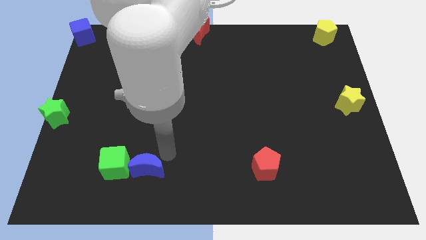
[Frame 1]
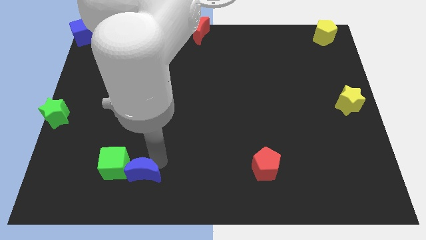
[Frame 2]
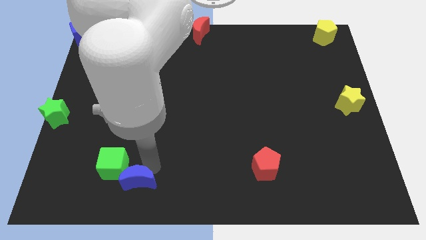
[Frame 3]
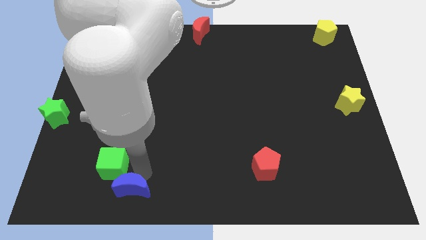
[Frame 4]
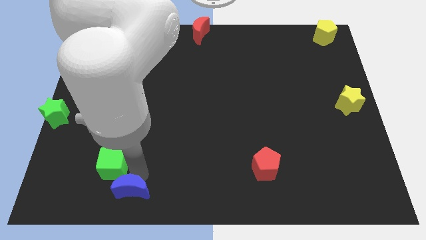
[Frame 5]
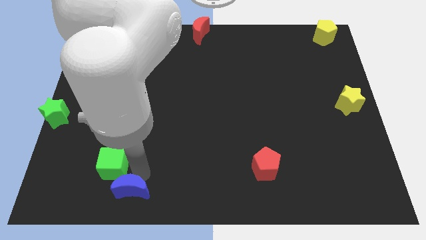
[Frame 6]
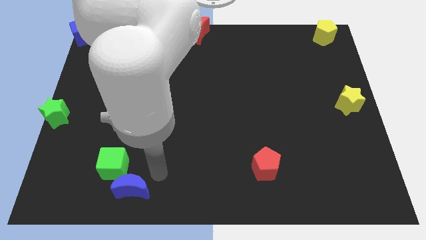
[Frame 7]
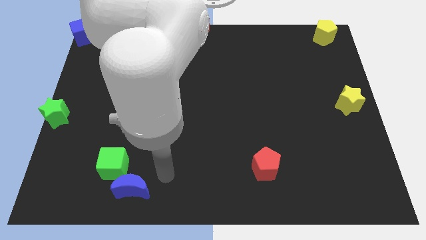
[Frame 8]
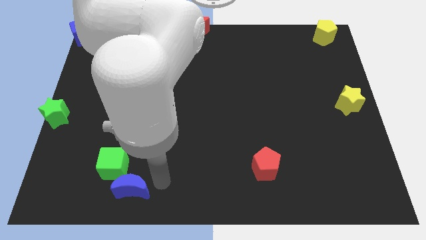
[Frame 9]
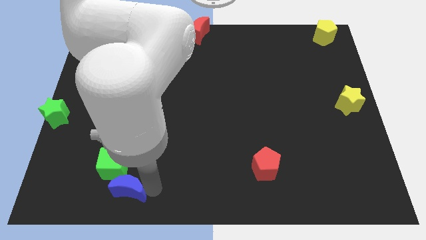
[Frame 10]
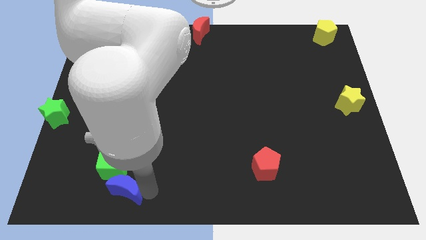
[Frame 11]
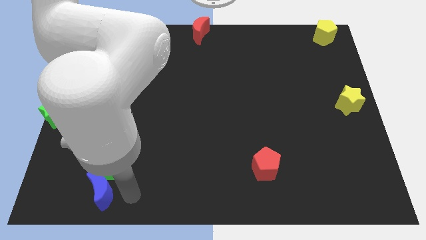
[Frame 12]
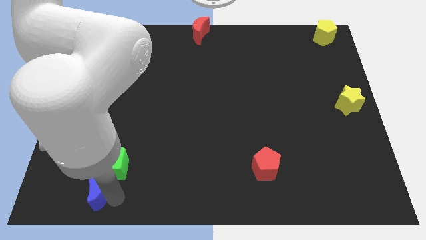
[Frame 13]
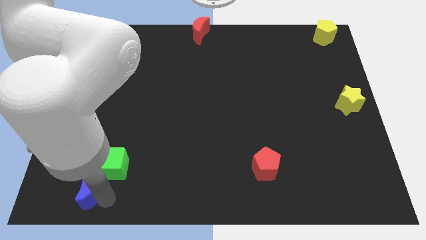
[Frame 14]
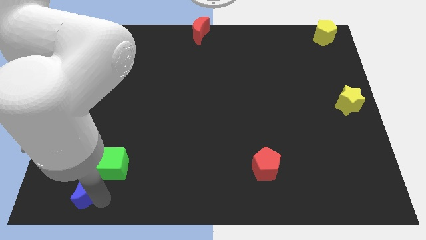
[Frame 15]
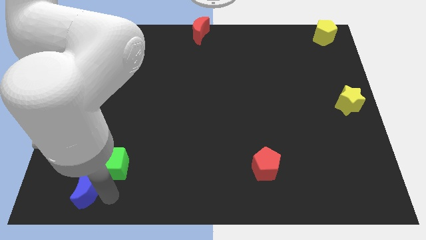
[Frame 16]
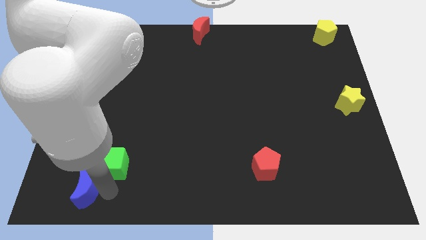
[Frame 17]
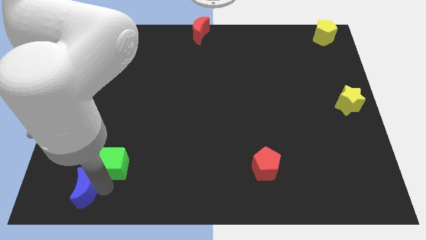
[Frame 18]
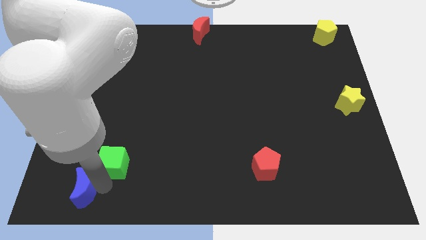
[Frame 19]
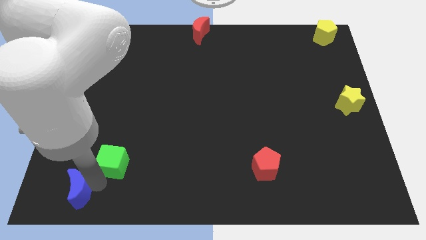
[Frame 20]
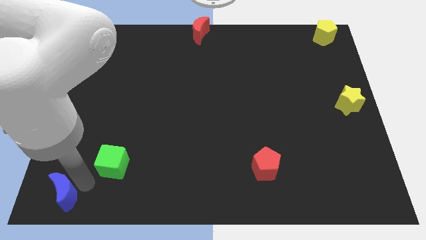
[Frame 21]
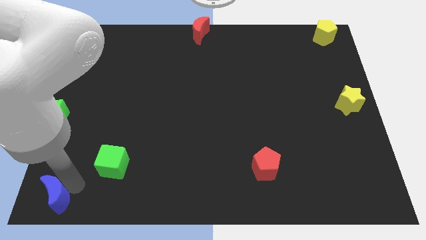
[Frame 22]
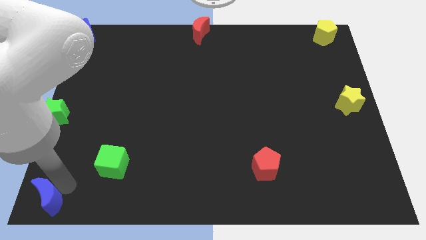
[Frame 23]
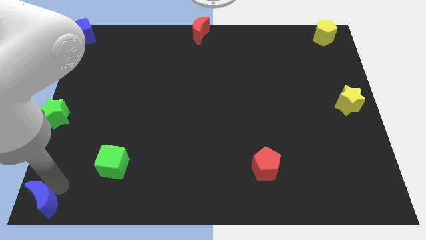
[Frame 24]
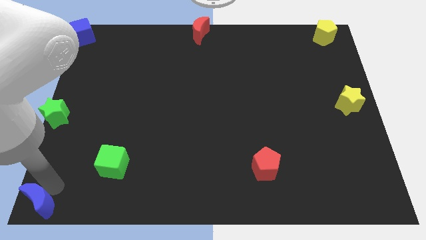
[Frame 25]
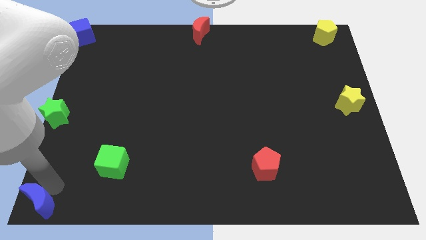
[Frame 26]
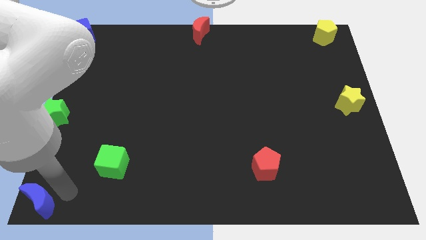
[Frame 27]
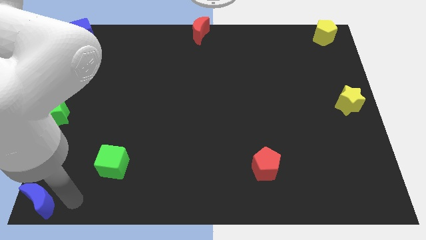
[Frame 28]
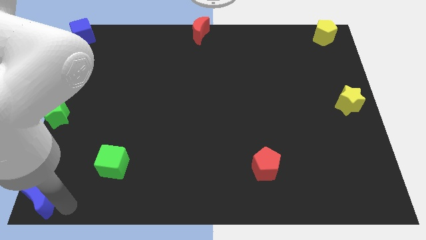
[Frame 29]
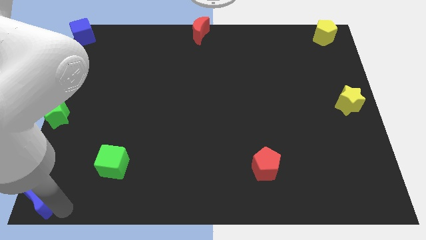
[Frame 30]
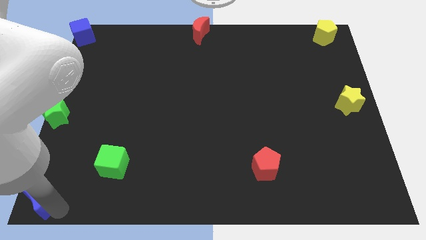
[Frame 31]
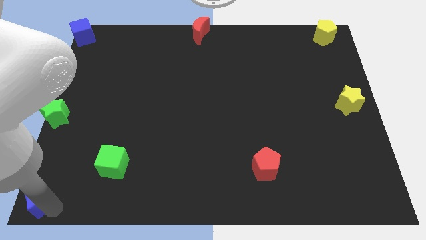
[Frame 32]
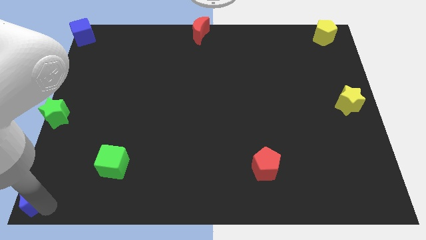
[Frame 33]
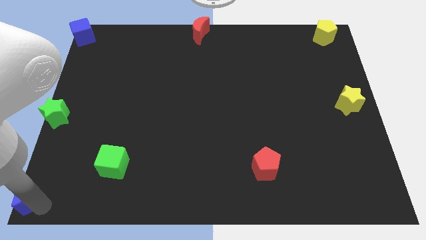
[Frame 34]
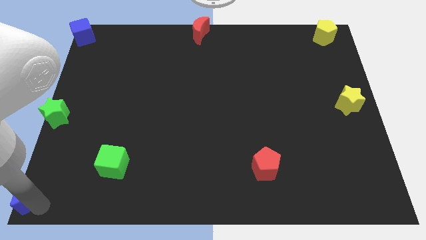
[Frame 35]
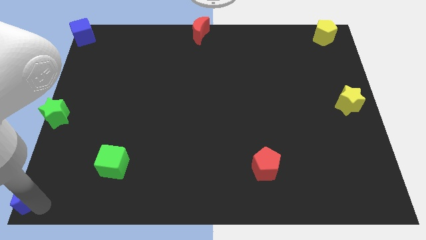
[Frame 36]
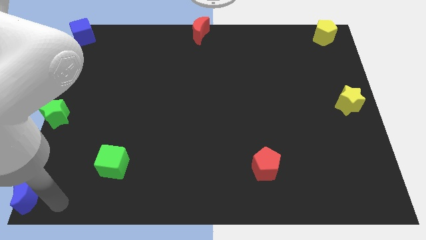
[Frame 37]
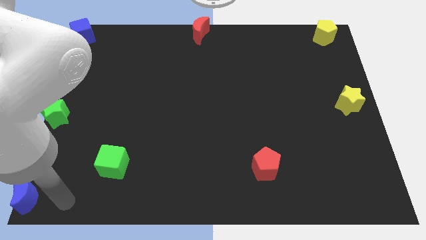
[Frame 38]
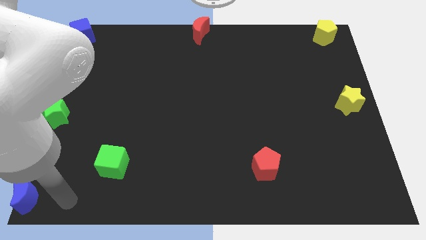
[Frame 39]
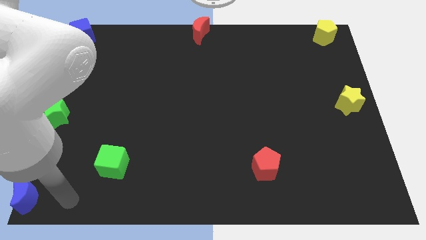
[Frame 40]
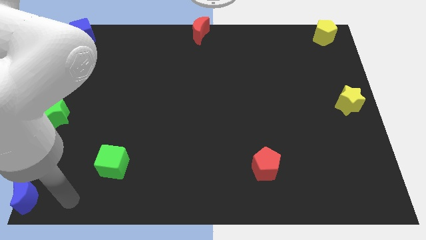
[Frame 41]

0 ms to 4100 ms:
move the blue moon to the bottom left of the board

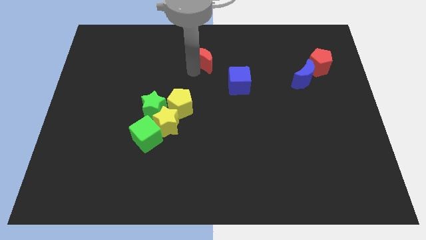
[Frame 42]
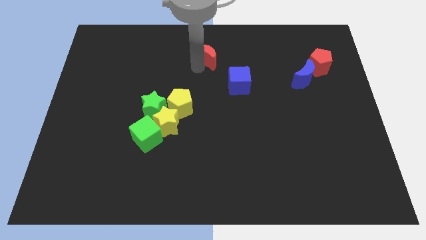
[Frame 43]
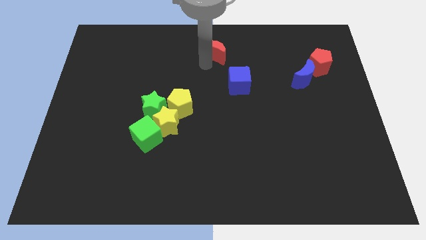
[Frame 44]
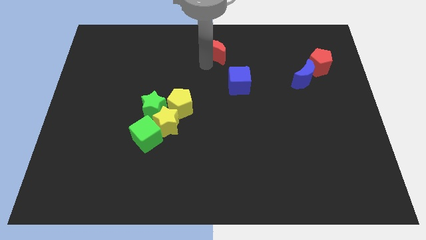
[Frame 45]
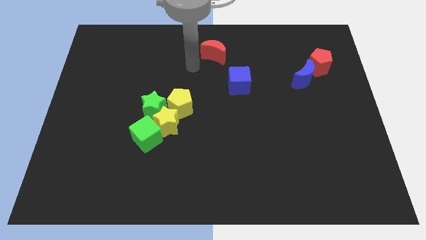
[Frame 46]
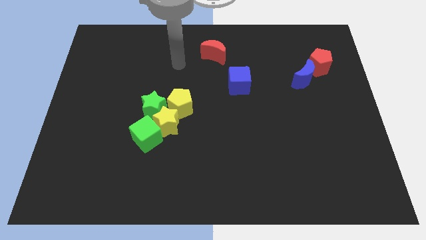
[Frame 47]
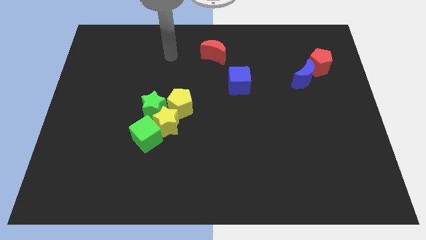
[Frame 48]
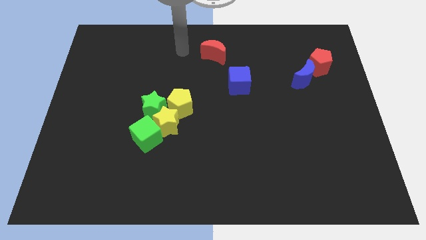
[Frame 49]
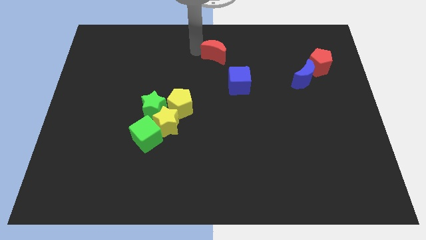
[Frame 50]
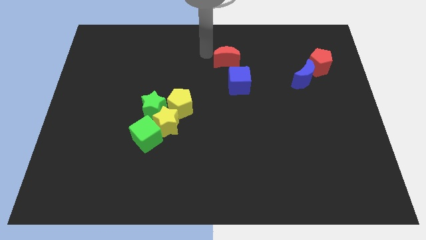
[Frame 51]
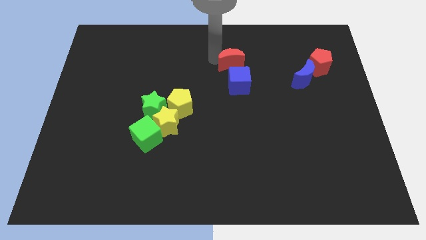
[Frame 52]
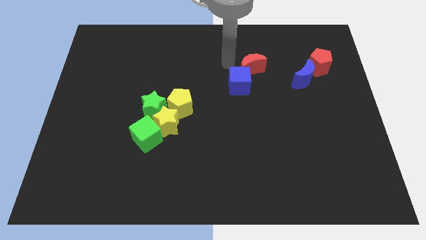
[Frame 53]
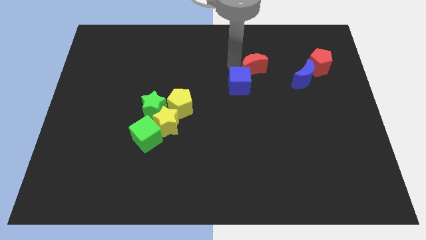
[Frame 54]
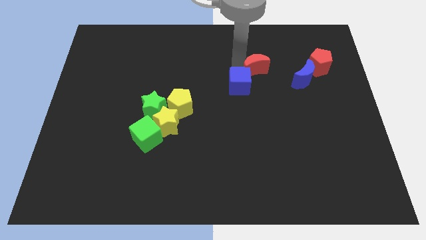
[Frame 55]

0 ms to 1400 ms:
move the red crescent into blue cube

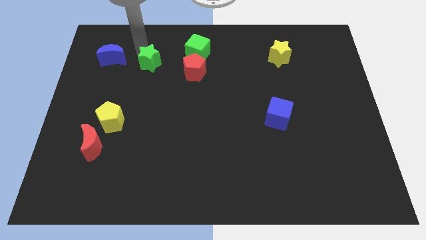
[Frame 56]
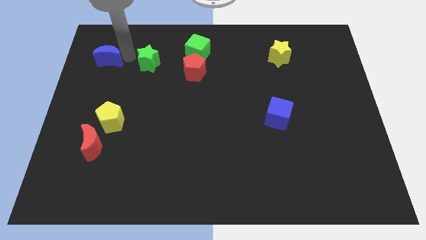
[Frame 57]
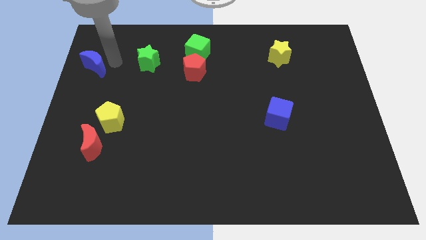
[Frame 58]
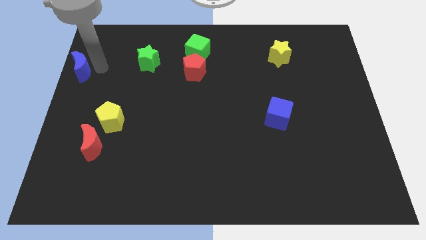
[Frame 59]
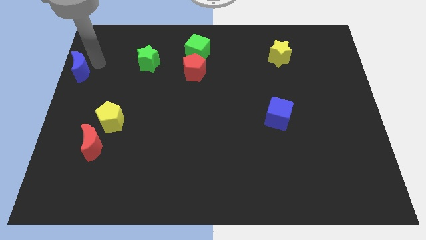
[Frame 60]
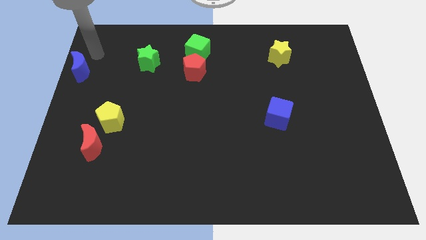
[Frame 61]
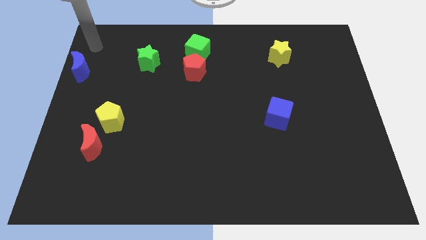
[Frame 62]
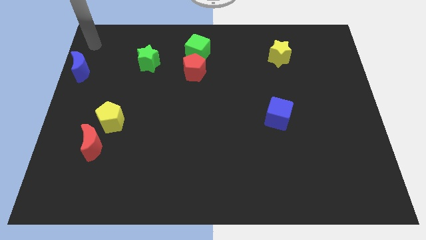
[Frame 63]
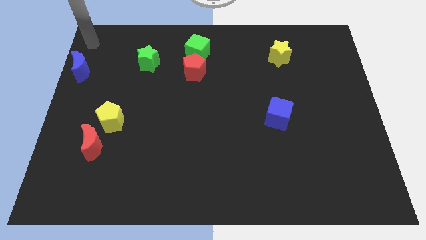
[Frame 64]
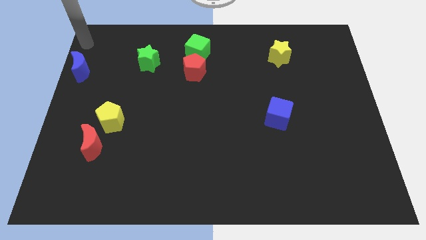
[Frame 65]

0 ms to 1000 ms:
push blue moon towards the left of the board

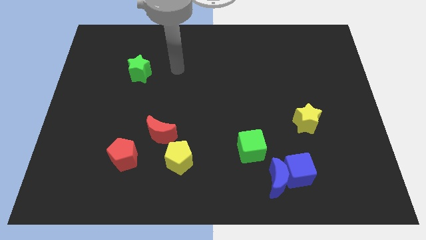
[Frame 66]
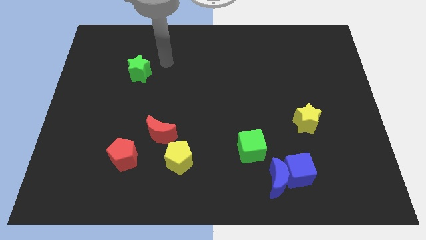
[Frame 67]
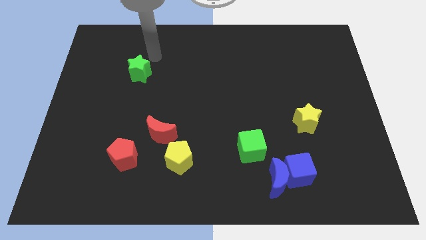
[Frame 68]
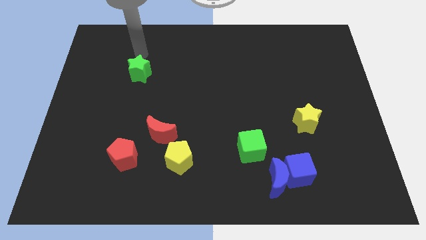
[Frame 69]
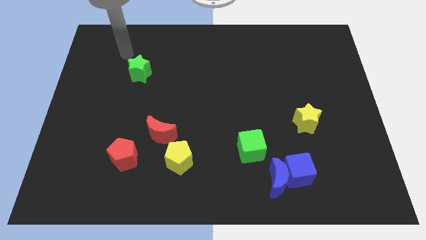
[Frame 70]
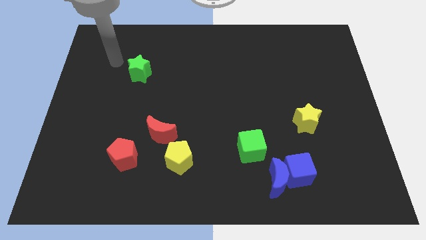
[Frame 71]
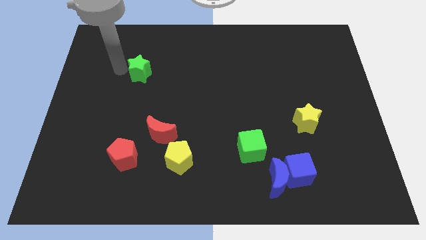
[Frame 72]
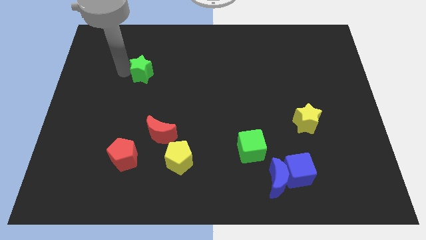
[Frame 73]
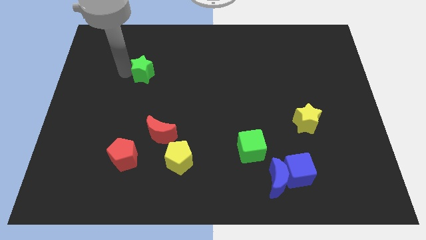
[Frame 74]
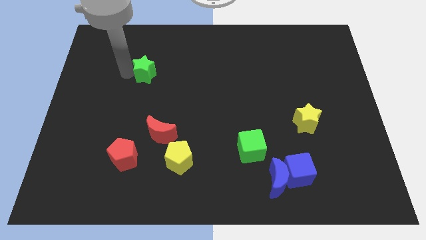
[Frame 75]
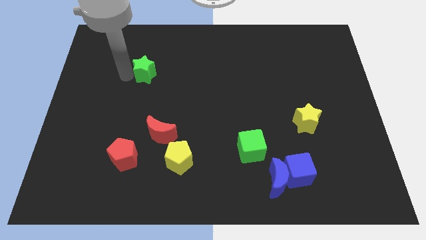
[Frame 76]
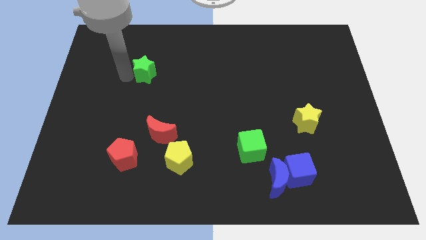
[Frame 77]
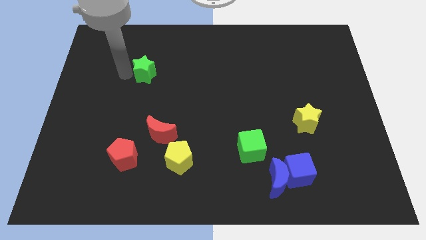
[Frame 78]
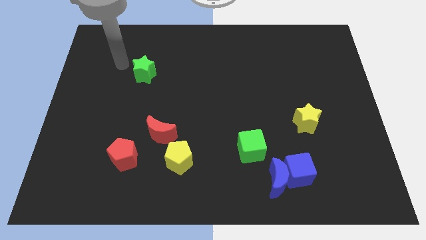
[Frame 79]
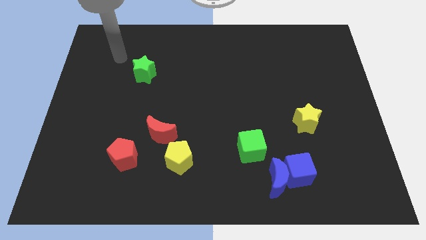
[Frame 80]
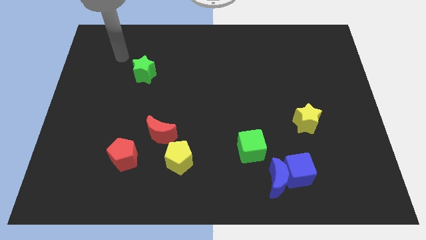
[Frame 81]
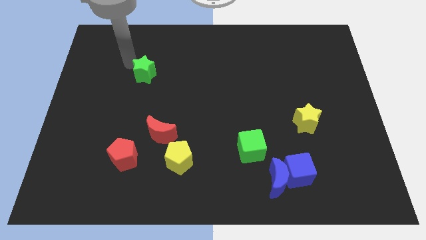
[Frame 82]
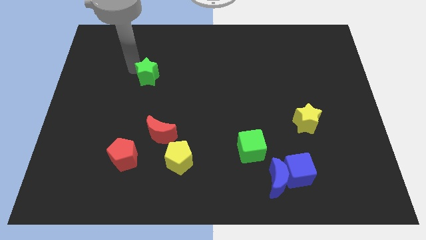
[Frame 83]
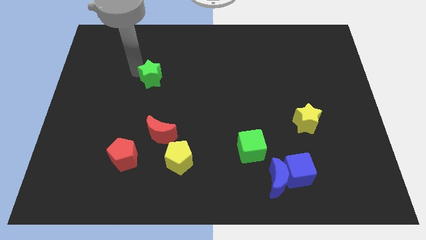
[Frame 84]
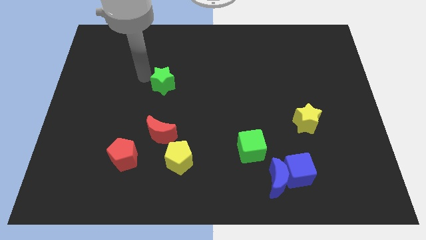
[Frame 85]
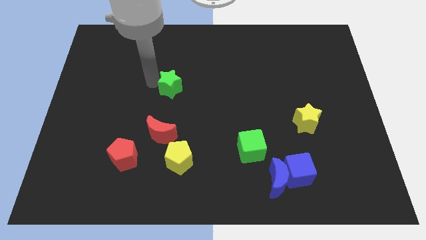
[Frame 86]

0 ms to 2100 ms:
push the green star to the top of the red crescent

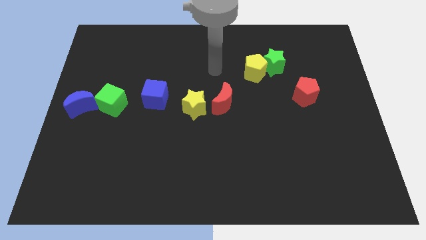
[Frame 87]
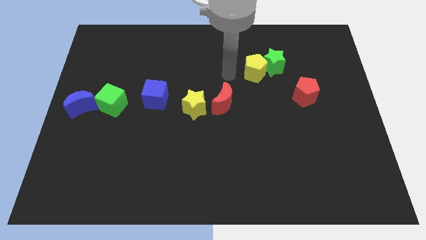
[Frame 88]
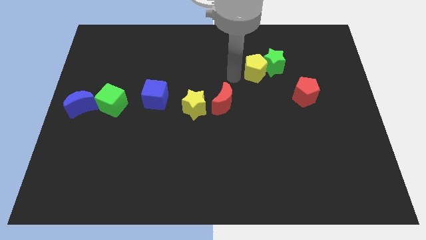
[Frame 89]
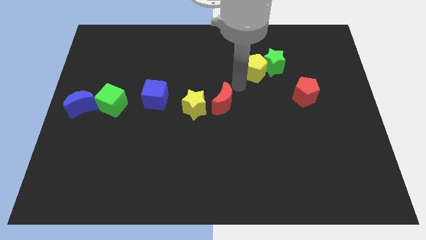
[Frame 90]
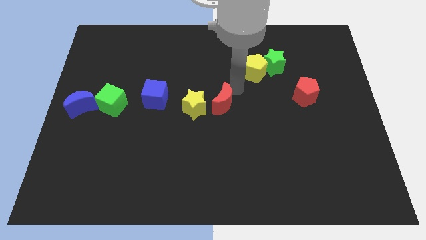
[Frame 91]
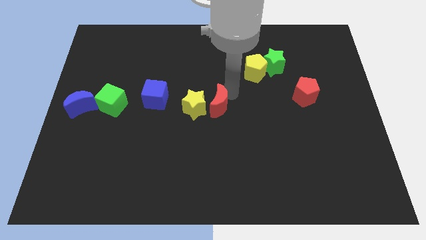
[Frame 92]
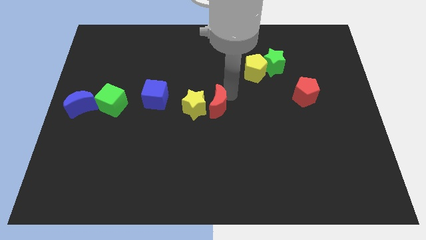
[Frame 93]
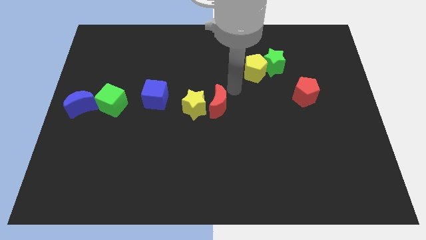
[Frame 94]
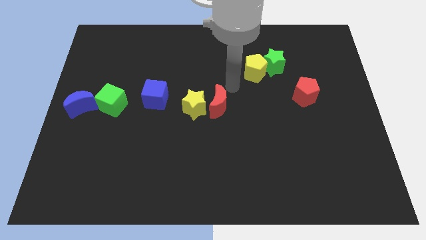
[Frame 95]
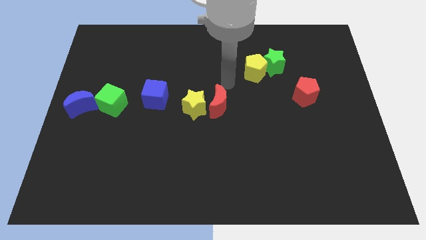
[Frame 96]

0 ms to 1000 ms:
move the red crescent slightly to the left
